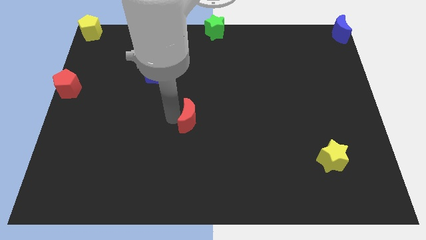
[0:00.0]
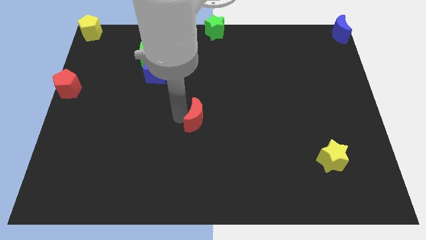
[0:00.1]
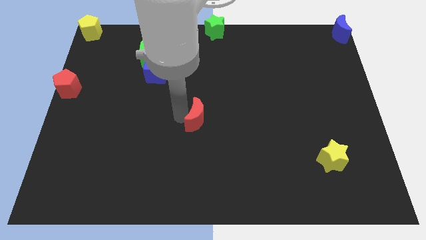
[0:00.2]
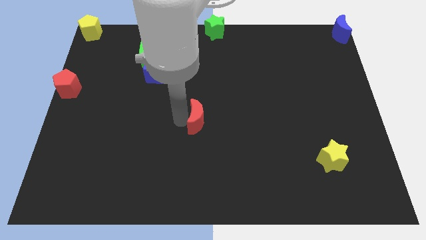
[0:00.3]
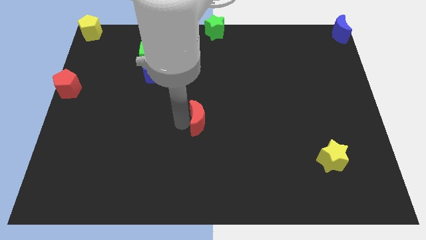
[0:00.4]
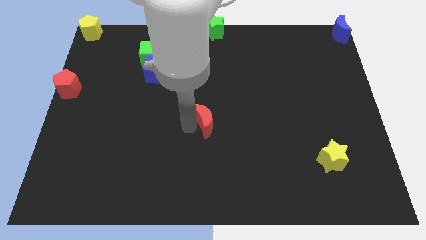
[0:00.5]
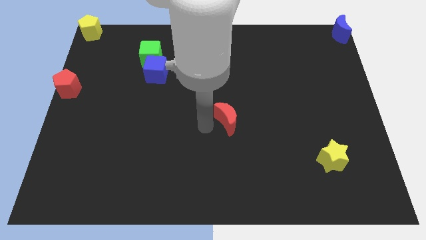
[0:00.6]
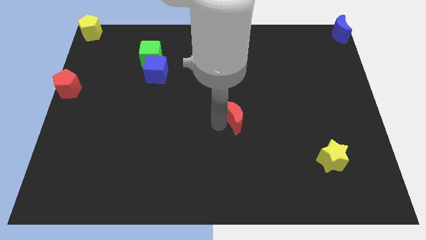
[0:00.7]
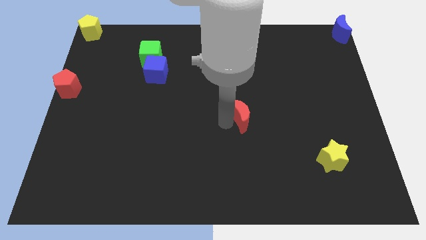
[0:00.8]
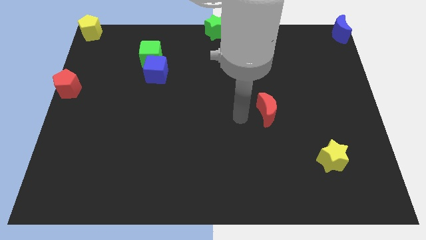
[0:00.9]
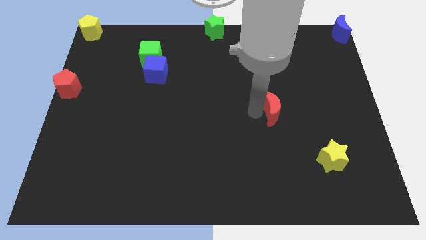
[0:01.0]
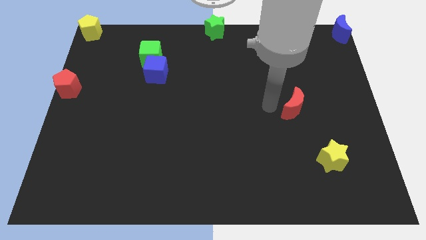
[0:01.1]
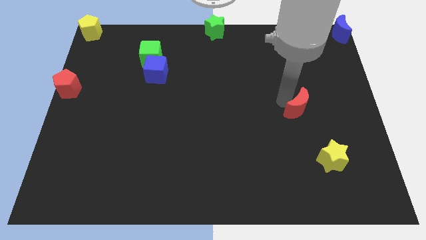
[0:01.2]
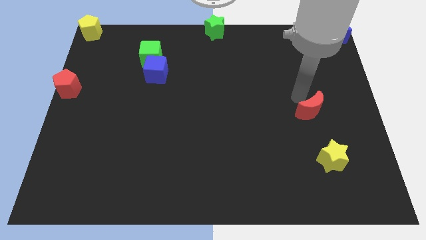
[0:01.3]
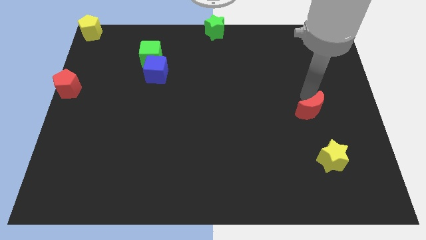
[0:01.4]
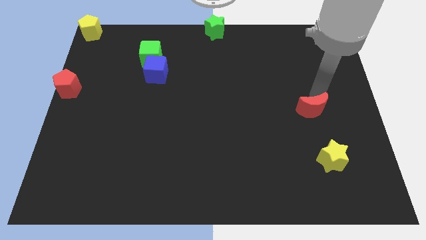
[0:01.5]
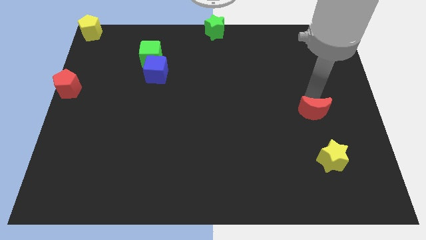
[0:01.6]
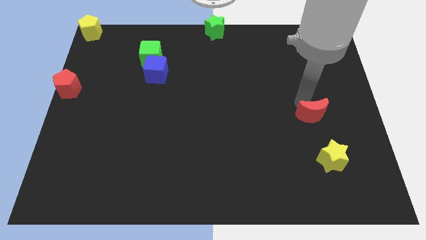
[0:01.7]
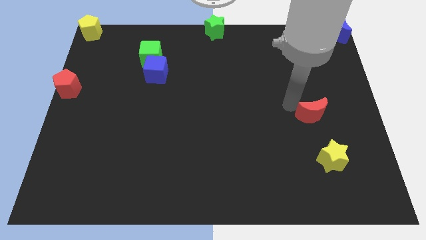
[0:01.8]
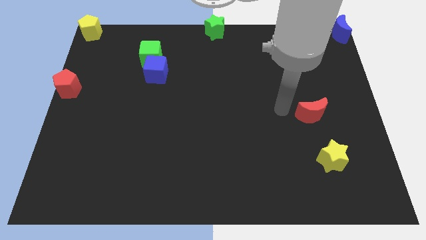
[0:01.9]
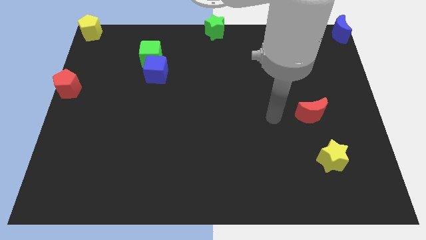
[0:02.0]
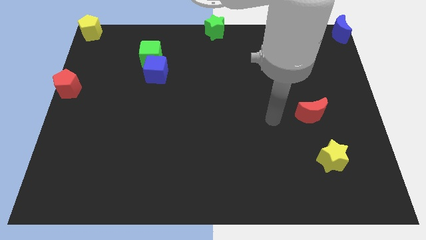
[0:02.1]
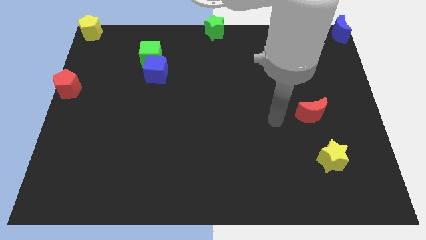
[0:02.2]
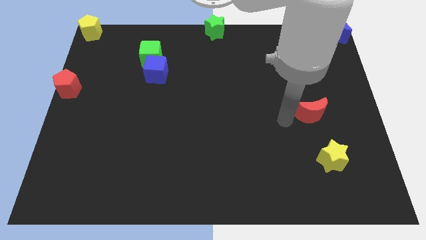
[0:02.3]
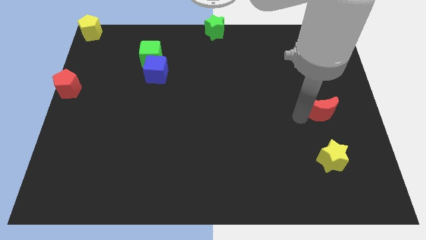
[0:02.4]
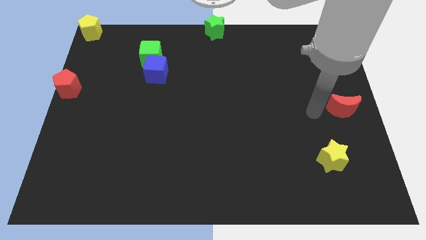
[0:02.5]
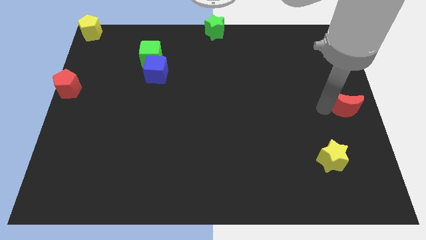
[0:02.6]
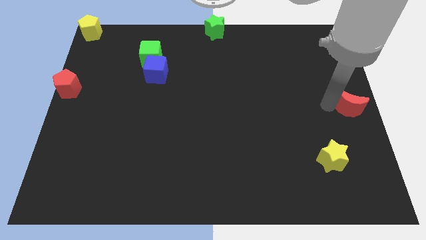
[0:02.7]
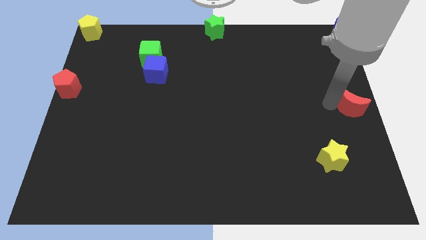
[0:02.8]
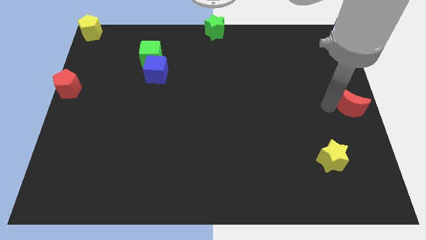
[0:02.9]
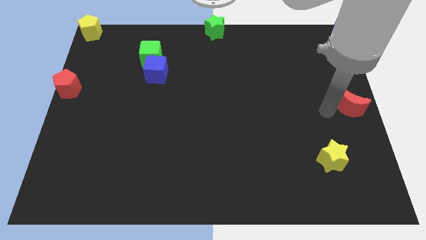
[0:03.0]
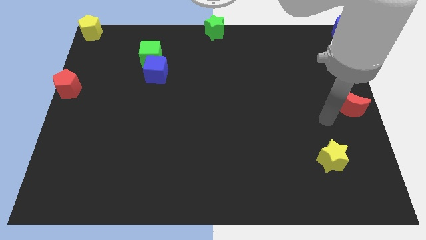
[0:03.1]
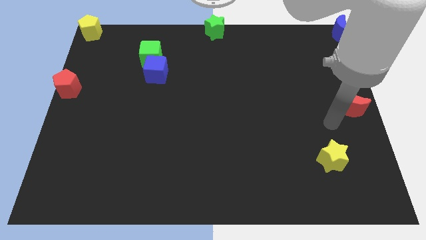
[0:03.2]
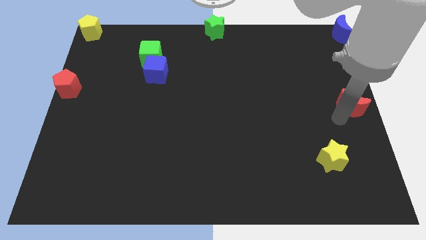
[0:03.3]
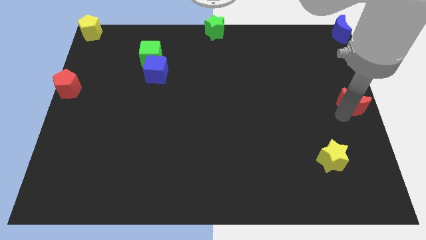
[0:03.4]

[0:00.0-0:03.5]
push the red moon to the center right

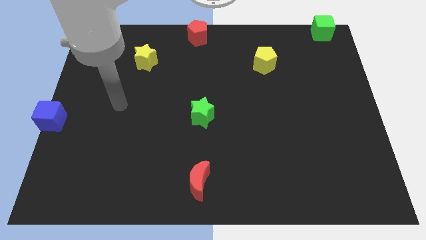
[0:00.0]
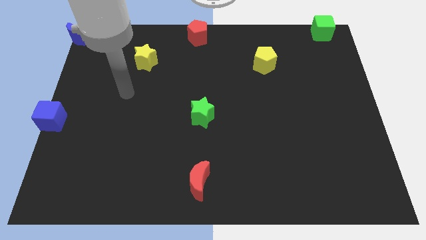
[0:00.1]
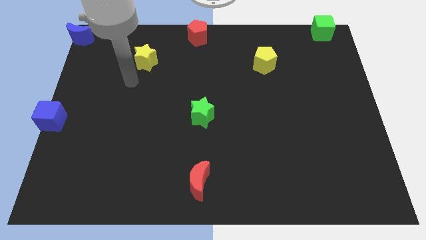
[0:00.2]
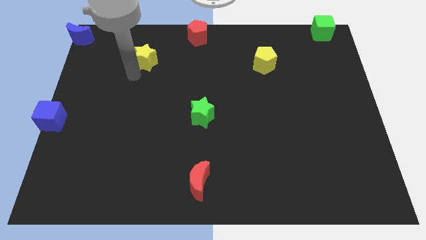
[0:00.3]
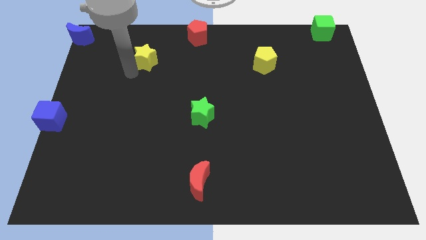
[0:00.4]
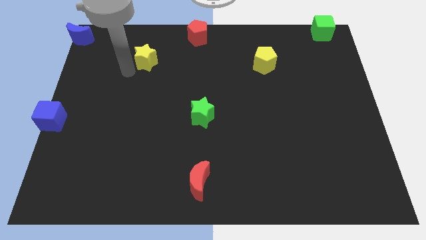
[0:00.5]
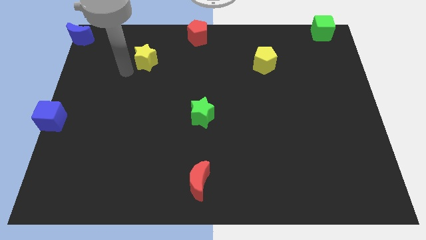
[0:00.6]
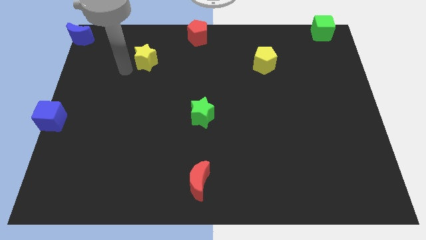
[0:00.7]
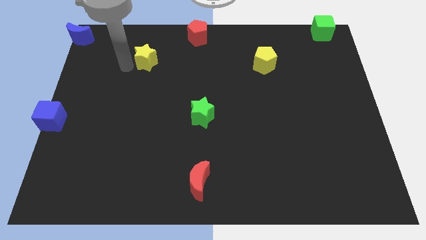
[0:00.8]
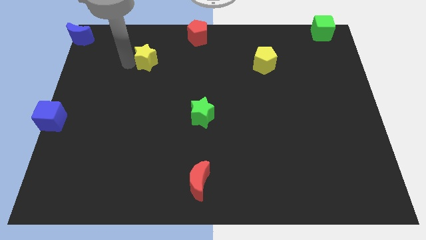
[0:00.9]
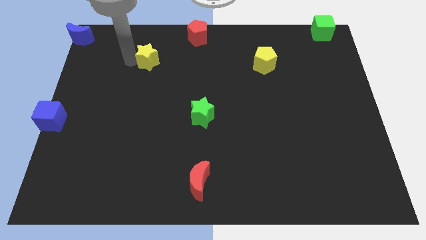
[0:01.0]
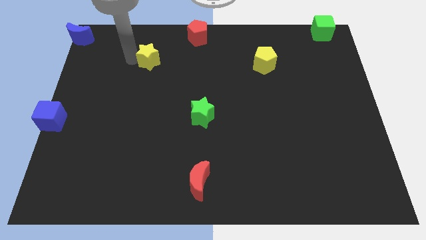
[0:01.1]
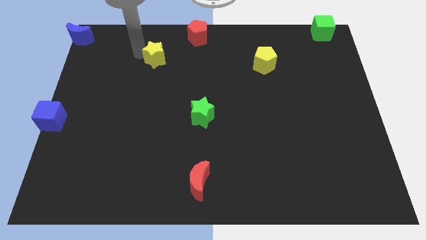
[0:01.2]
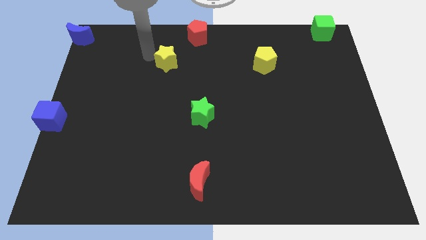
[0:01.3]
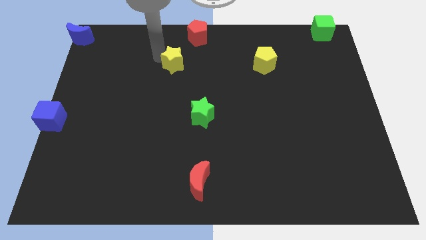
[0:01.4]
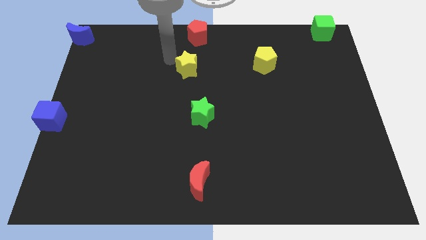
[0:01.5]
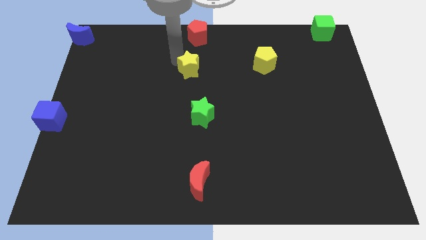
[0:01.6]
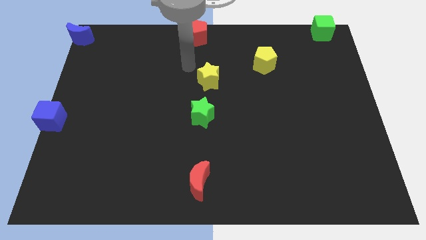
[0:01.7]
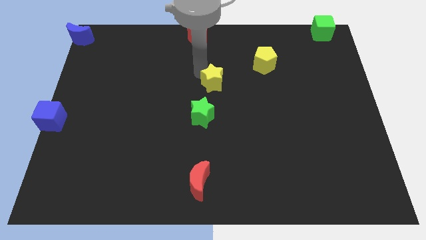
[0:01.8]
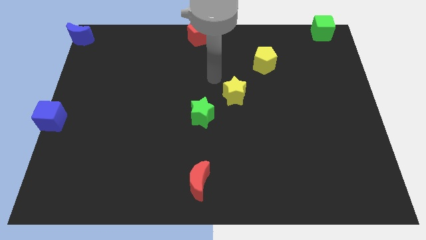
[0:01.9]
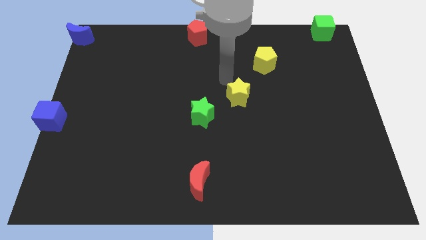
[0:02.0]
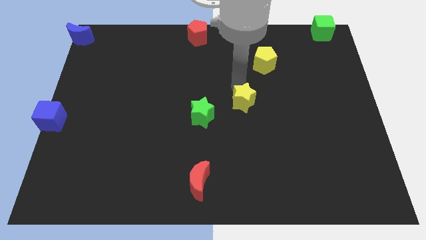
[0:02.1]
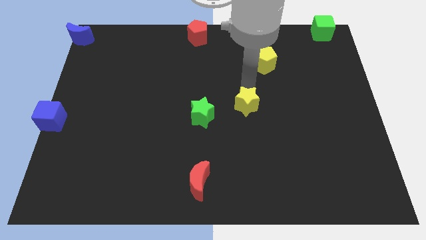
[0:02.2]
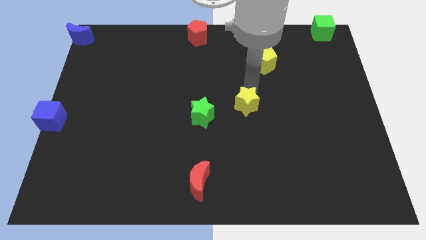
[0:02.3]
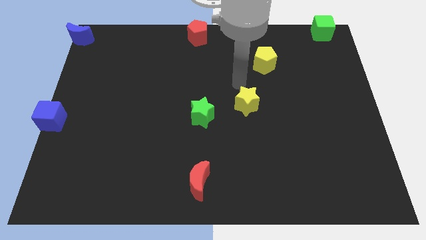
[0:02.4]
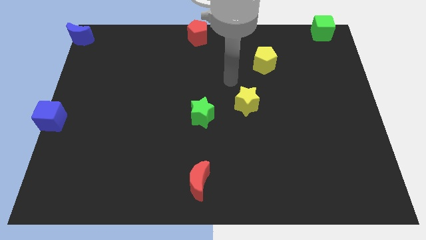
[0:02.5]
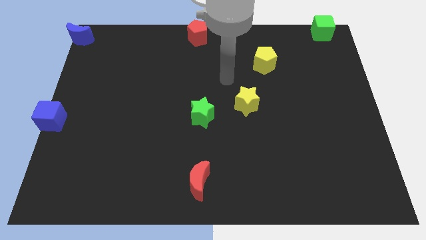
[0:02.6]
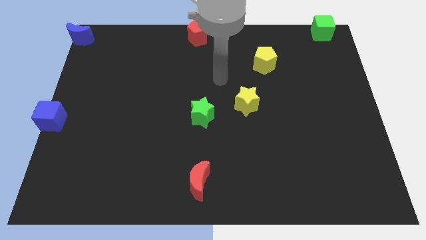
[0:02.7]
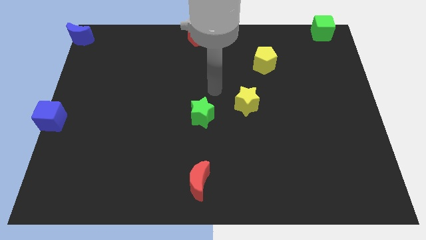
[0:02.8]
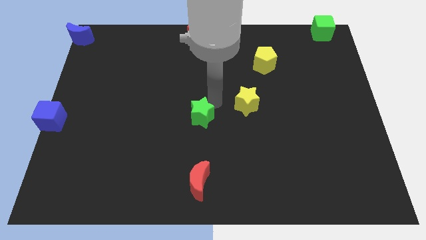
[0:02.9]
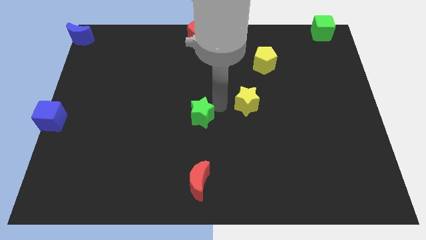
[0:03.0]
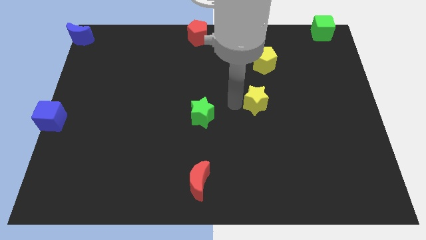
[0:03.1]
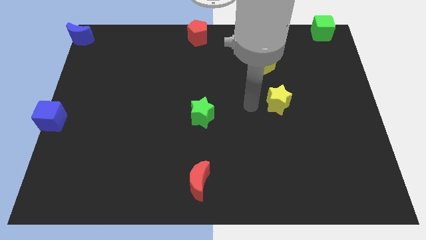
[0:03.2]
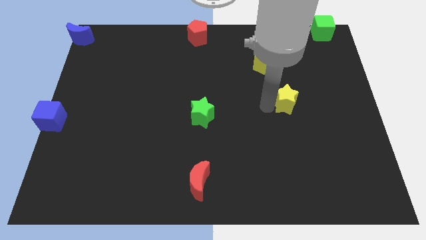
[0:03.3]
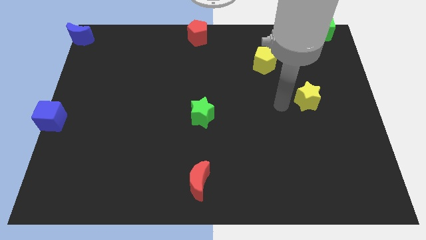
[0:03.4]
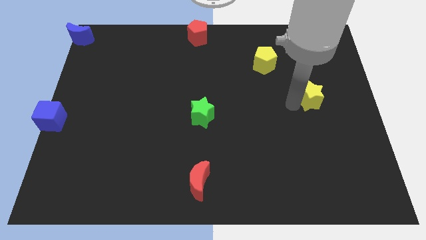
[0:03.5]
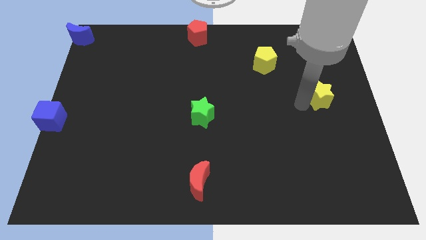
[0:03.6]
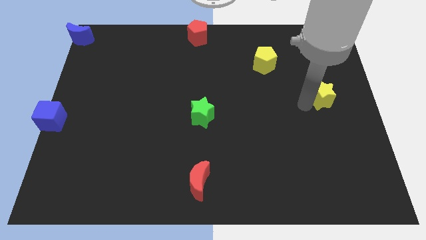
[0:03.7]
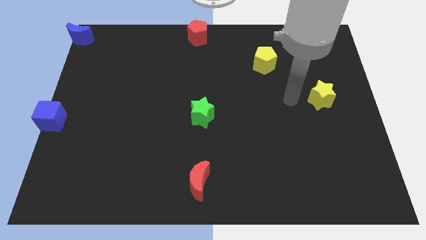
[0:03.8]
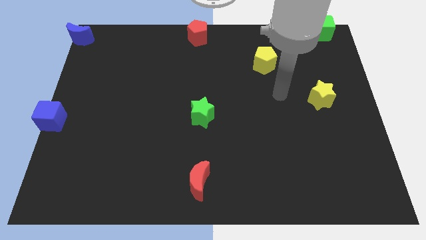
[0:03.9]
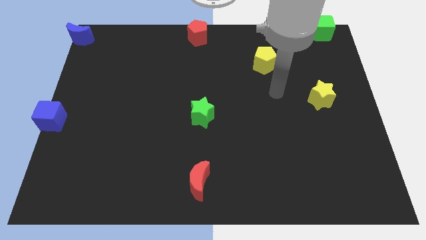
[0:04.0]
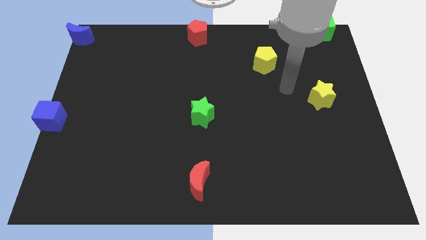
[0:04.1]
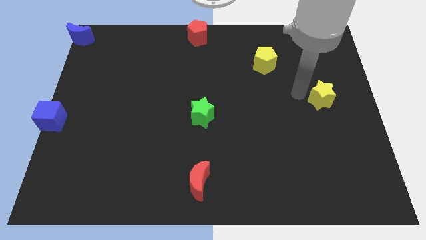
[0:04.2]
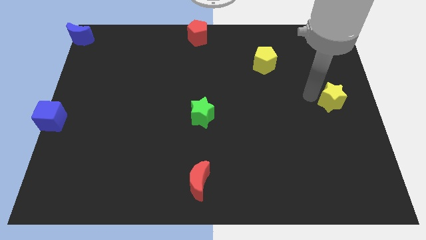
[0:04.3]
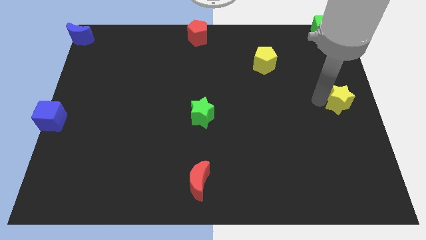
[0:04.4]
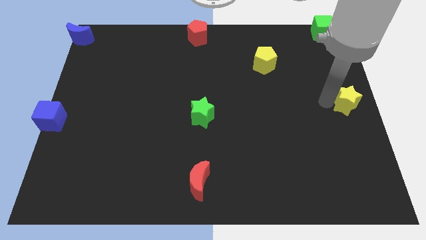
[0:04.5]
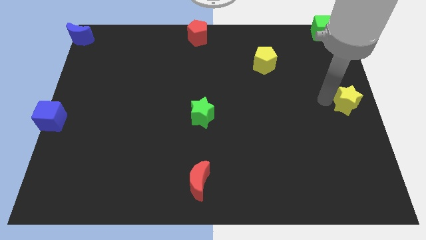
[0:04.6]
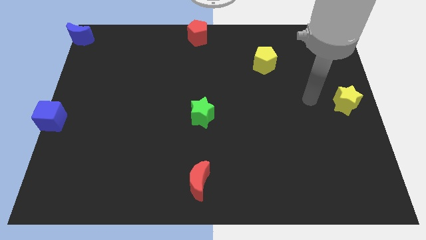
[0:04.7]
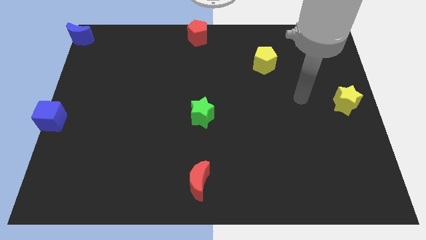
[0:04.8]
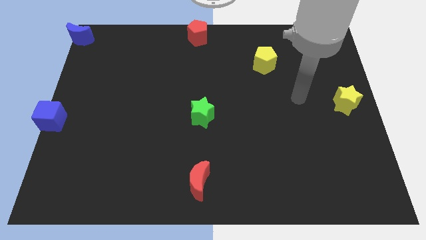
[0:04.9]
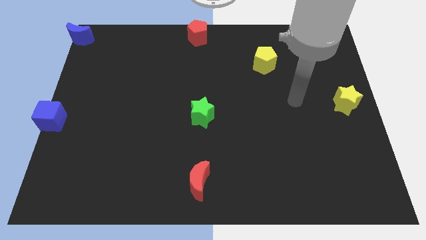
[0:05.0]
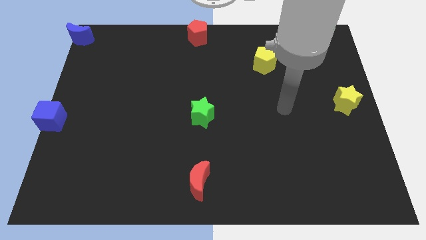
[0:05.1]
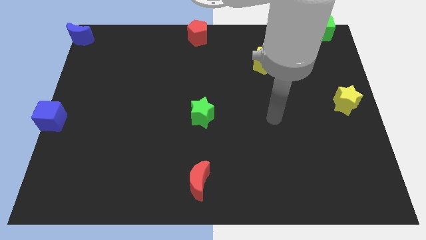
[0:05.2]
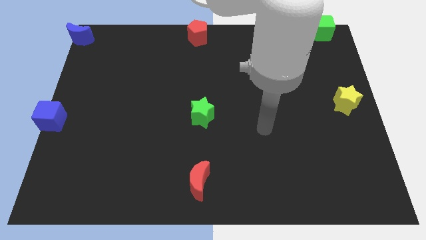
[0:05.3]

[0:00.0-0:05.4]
place the yellow star to the center right of the board
